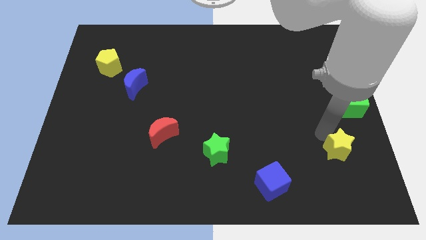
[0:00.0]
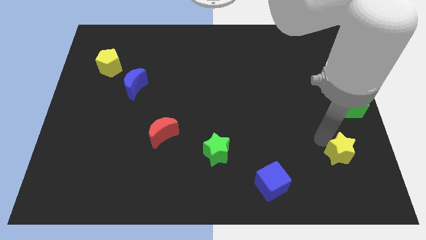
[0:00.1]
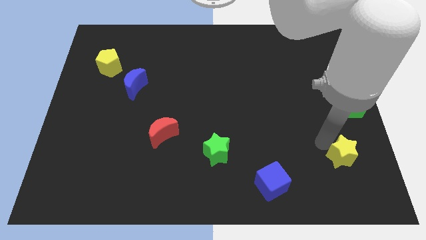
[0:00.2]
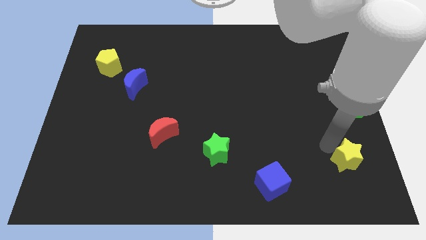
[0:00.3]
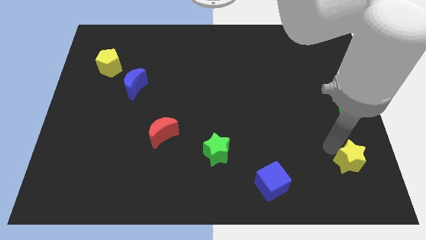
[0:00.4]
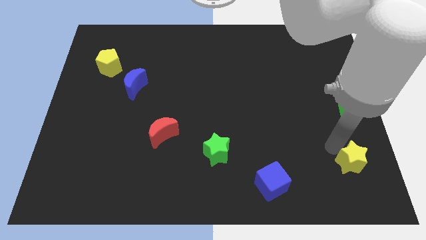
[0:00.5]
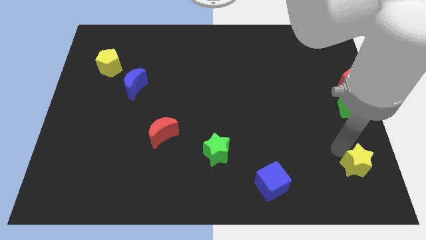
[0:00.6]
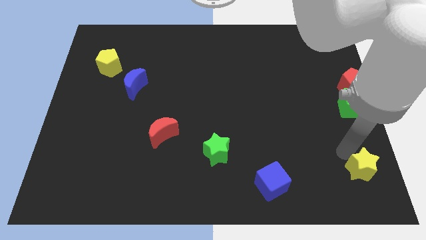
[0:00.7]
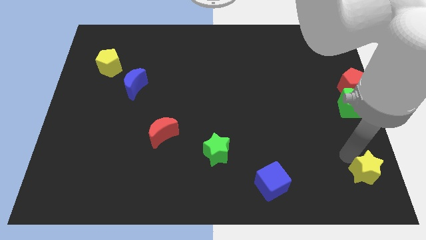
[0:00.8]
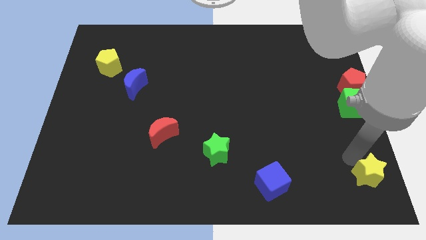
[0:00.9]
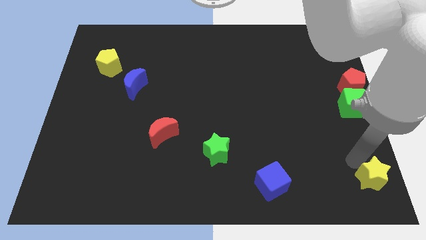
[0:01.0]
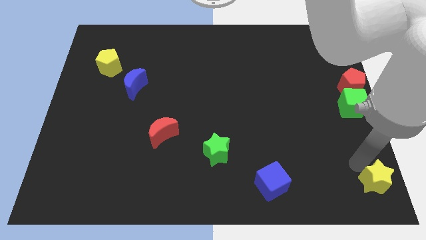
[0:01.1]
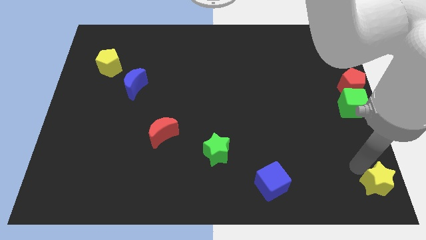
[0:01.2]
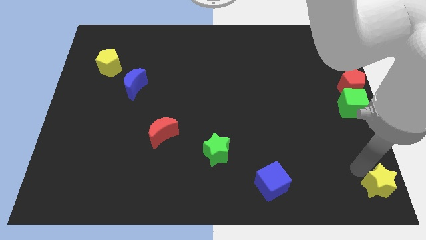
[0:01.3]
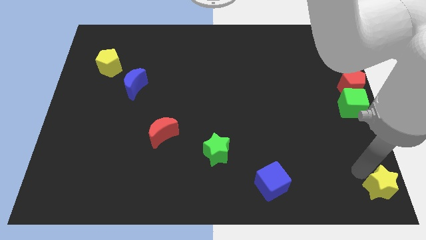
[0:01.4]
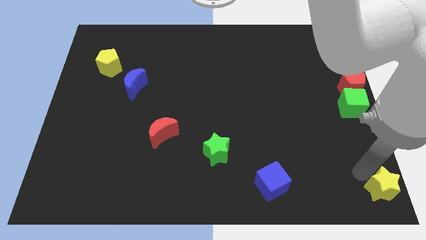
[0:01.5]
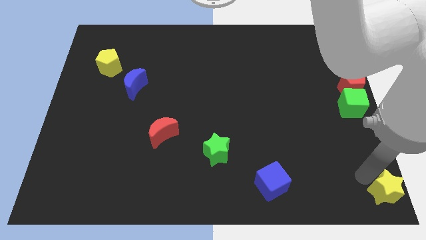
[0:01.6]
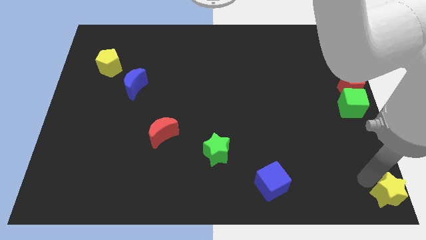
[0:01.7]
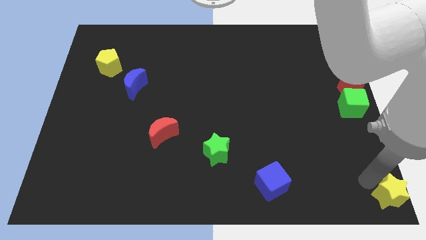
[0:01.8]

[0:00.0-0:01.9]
slide the yellow star towards the bottom right corner of the board

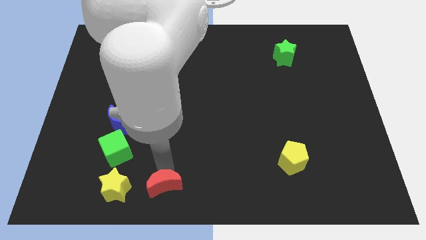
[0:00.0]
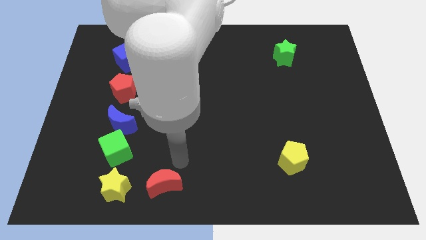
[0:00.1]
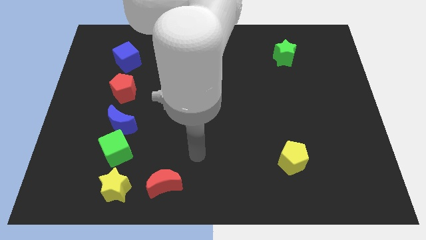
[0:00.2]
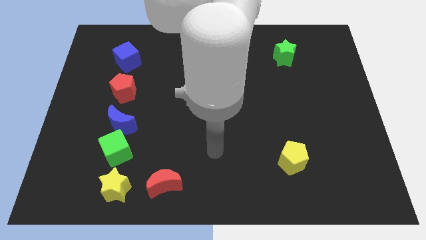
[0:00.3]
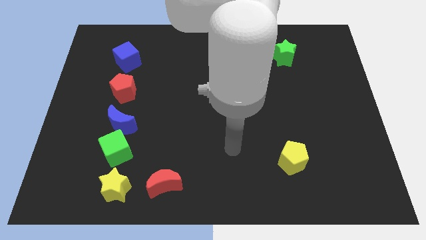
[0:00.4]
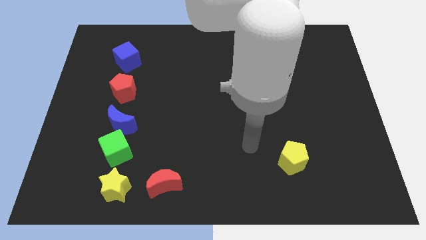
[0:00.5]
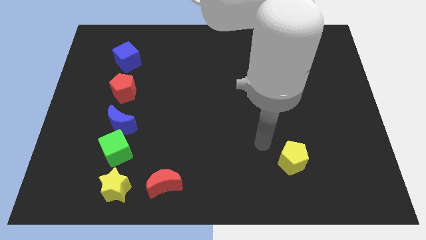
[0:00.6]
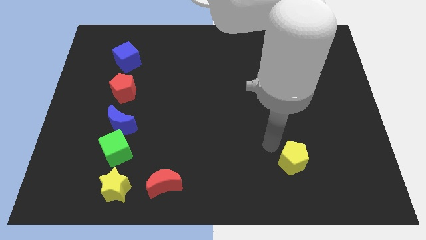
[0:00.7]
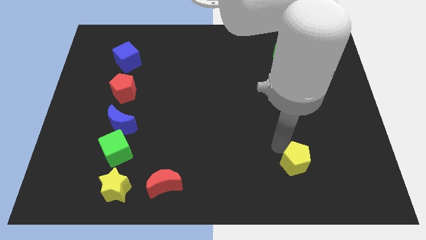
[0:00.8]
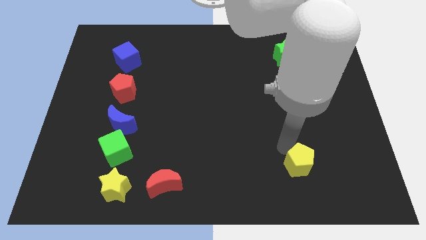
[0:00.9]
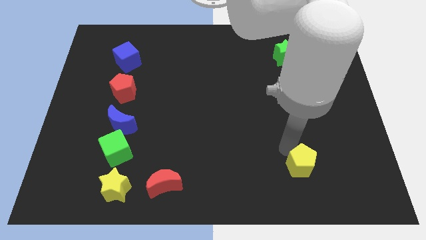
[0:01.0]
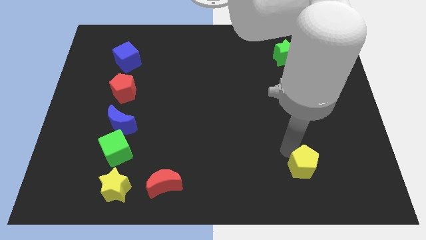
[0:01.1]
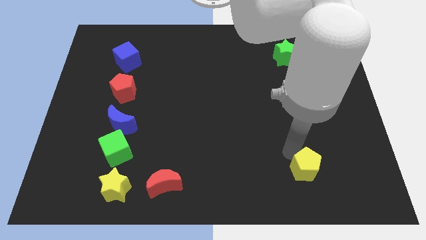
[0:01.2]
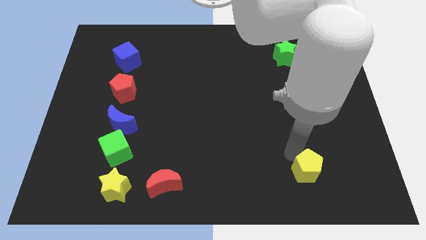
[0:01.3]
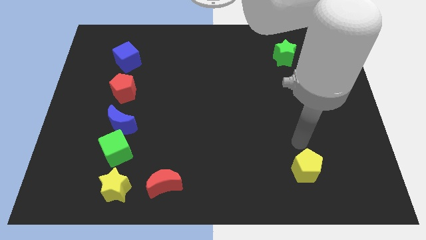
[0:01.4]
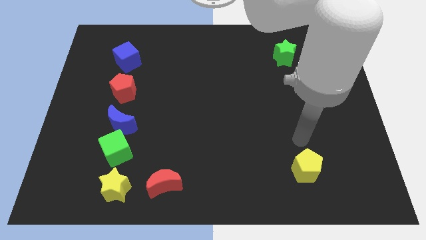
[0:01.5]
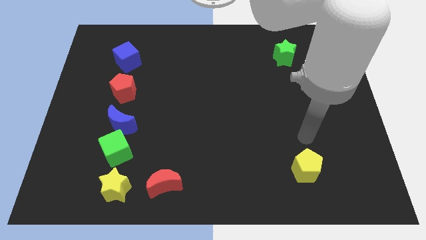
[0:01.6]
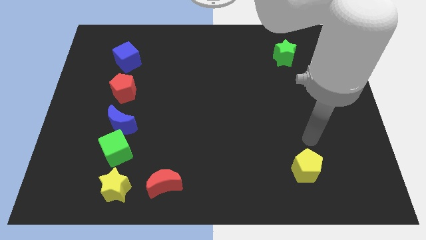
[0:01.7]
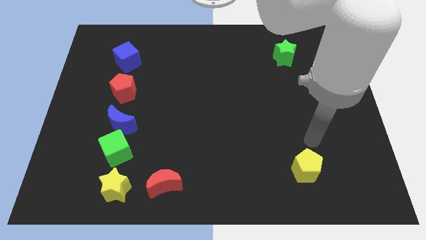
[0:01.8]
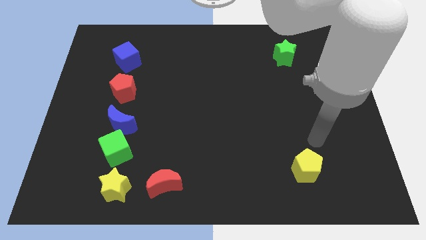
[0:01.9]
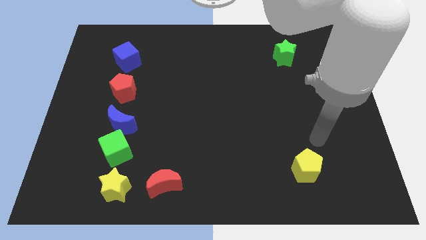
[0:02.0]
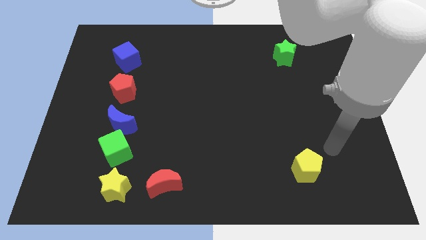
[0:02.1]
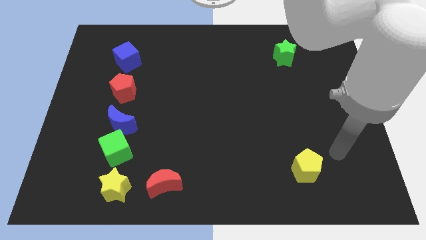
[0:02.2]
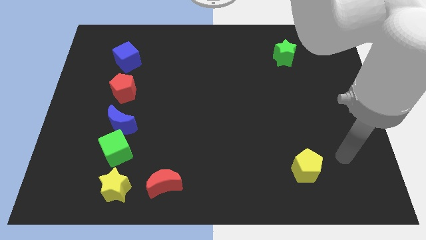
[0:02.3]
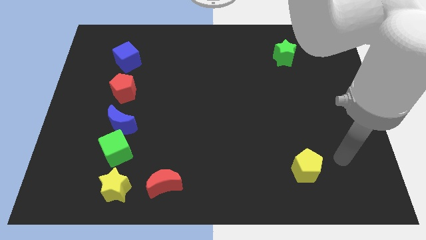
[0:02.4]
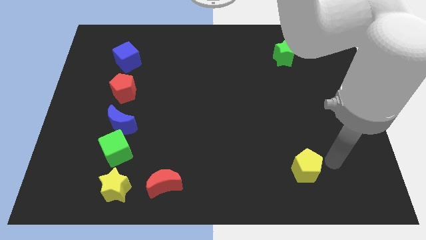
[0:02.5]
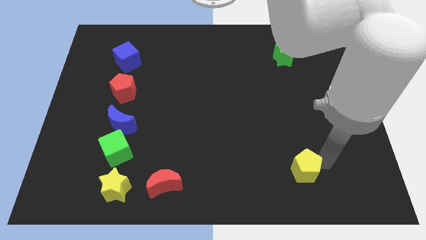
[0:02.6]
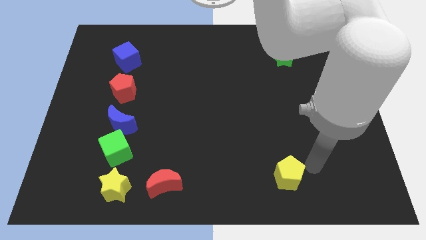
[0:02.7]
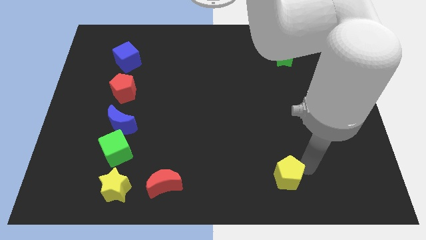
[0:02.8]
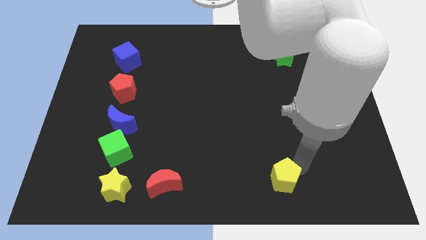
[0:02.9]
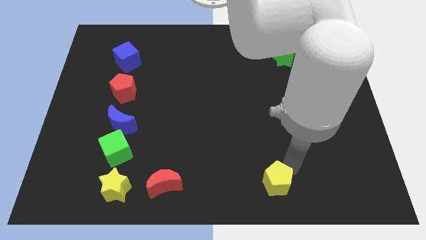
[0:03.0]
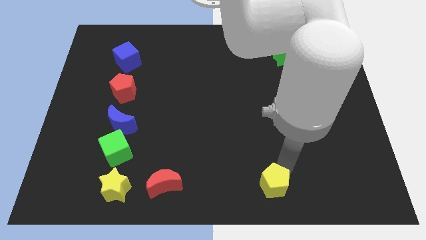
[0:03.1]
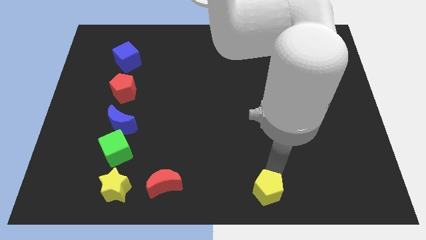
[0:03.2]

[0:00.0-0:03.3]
push the yellow pentagon slightly to the left

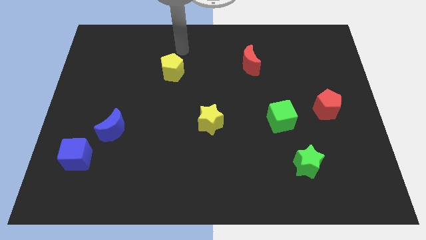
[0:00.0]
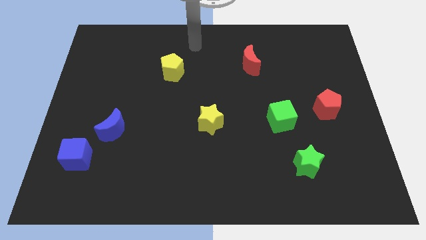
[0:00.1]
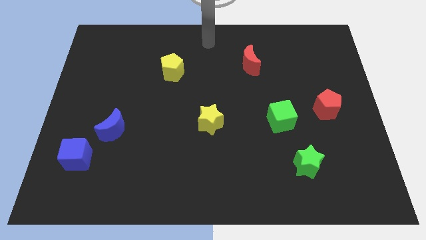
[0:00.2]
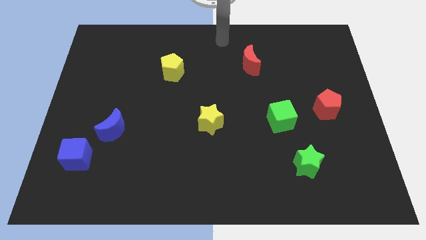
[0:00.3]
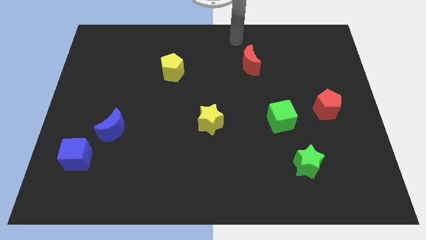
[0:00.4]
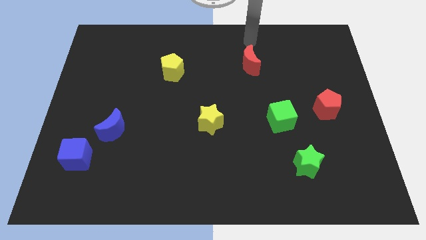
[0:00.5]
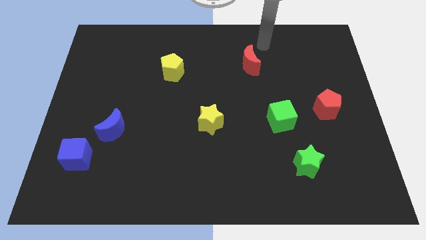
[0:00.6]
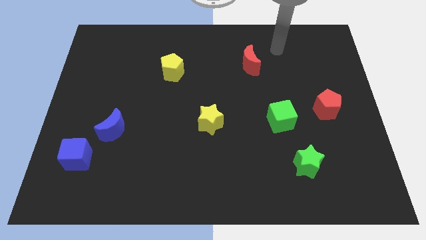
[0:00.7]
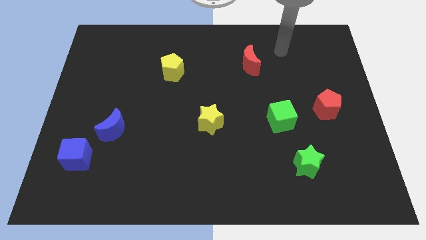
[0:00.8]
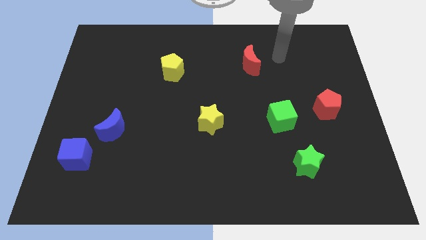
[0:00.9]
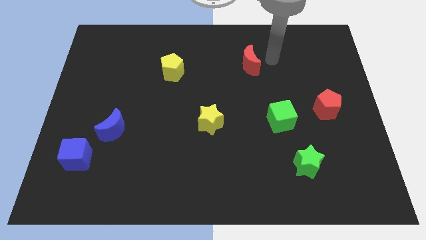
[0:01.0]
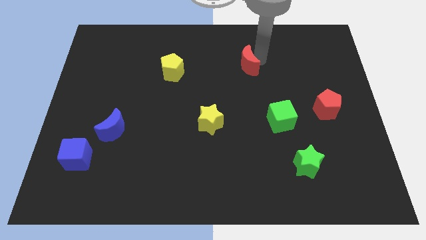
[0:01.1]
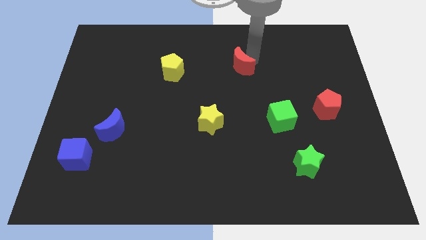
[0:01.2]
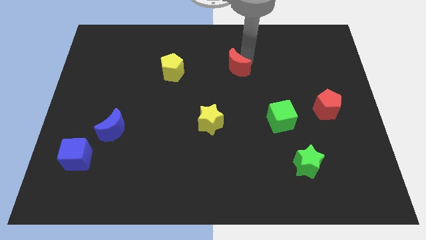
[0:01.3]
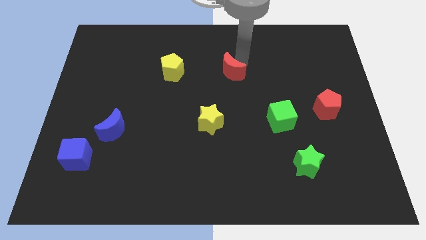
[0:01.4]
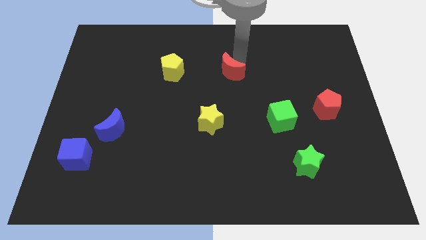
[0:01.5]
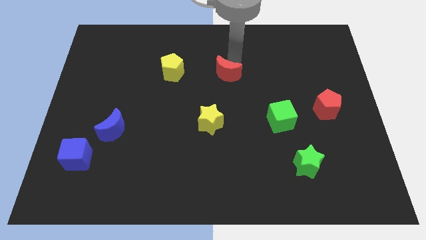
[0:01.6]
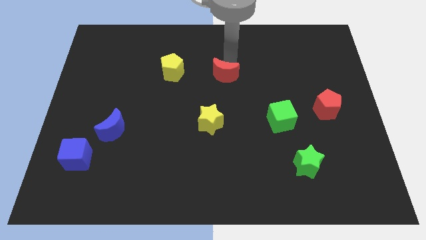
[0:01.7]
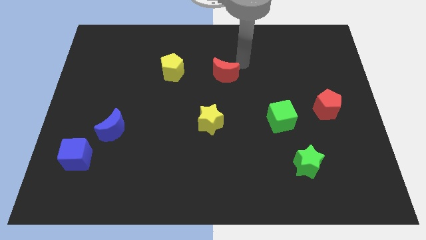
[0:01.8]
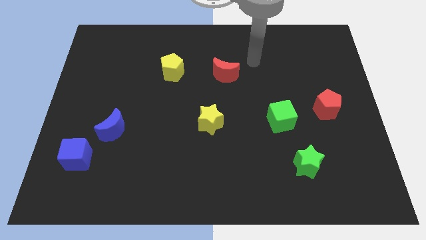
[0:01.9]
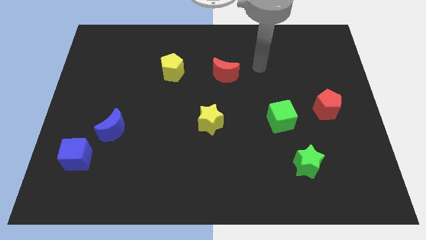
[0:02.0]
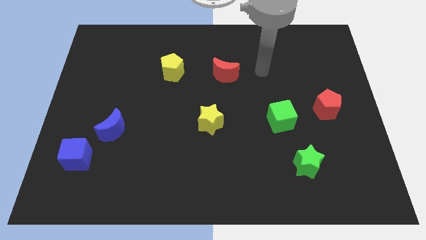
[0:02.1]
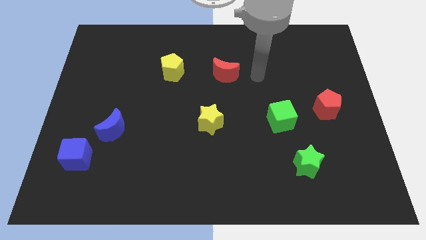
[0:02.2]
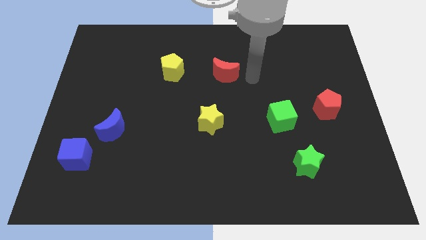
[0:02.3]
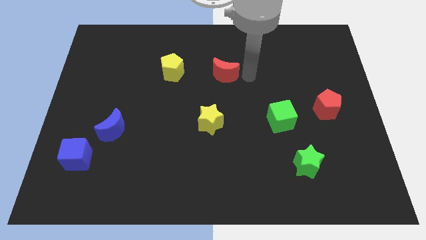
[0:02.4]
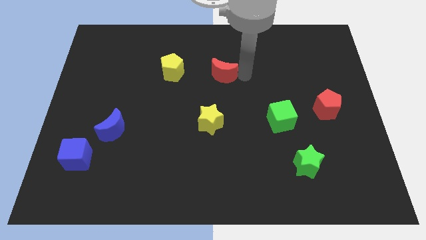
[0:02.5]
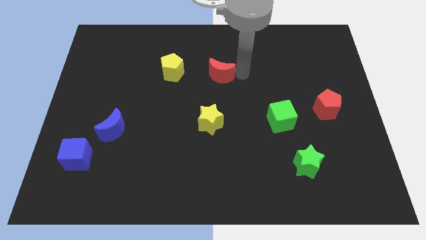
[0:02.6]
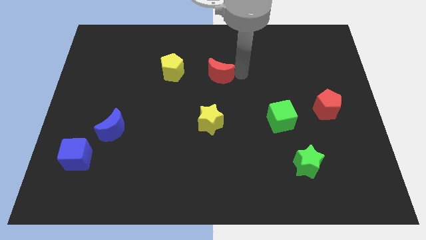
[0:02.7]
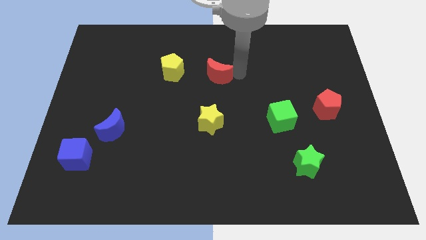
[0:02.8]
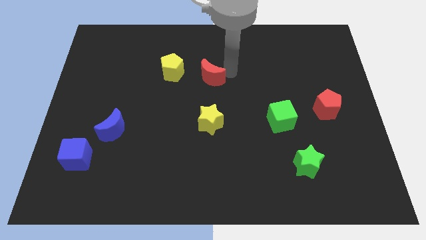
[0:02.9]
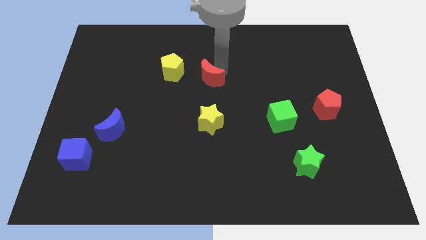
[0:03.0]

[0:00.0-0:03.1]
move the red crescent towards the right side of the yellow pentagon

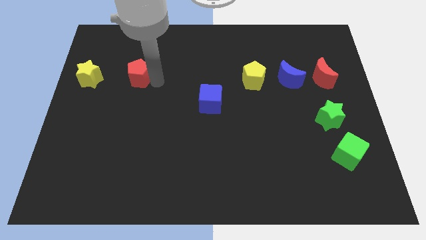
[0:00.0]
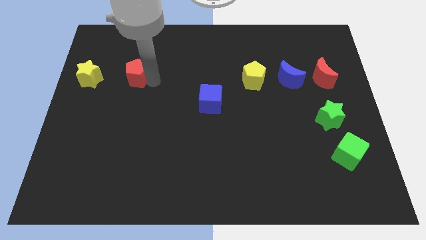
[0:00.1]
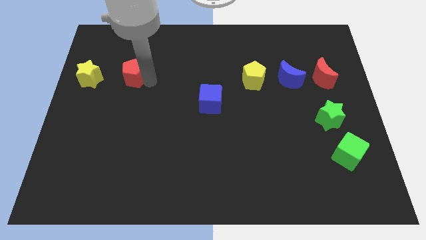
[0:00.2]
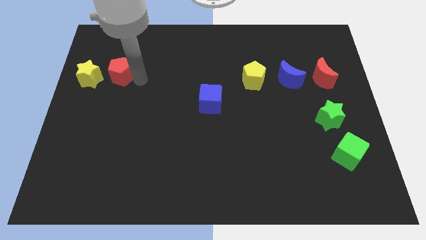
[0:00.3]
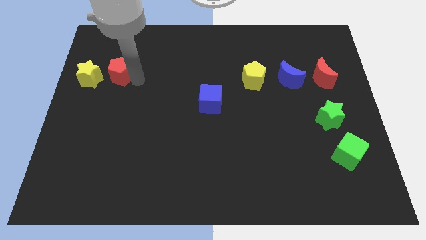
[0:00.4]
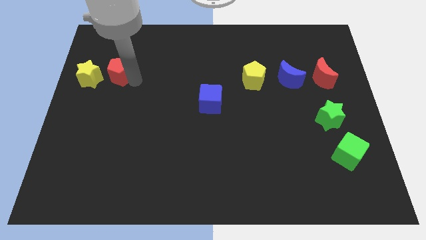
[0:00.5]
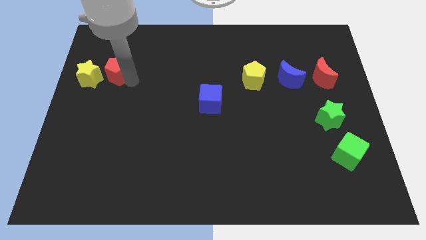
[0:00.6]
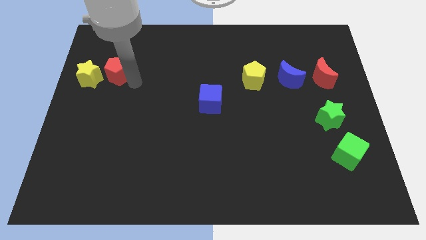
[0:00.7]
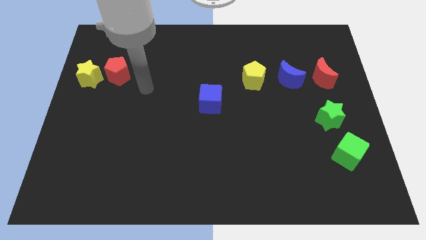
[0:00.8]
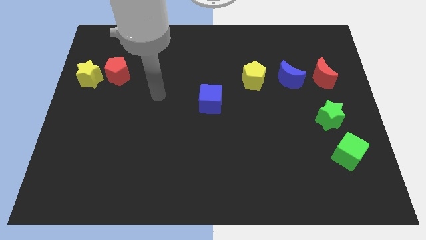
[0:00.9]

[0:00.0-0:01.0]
move the red pentagon close to the yellow star
